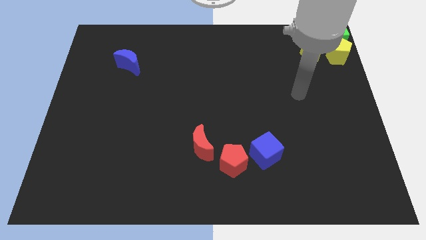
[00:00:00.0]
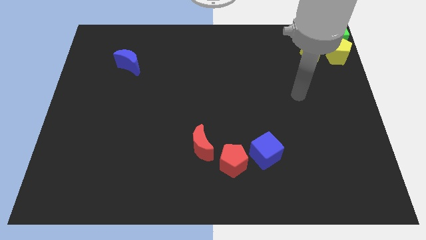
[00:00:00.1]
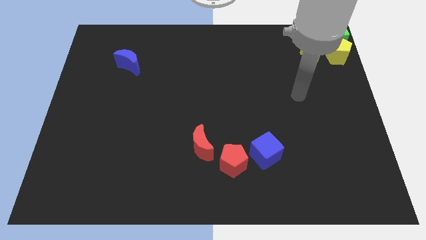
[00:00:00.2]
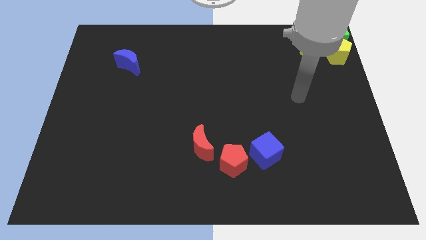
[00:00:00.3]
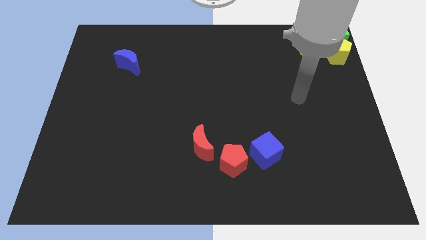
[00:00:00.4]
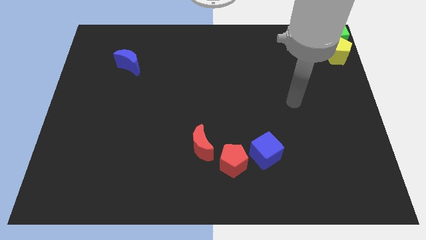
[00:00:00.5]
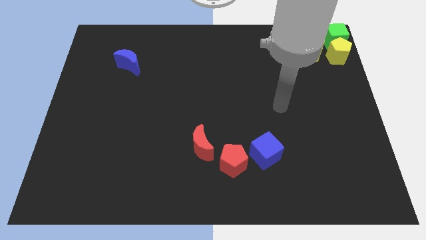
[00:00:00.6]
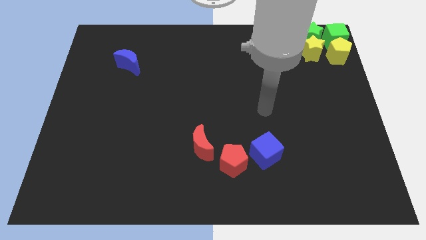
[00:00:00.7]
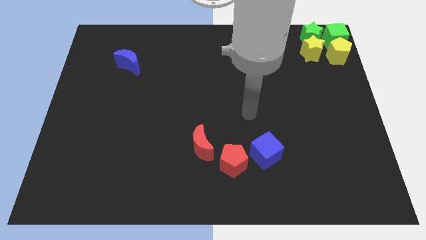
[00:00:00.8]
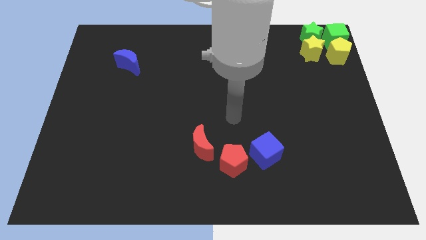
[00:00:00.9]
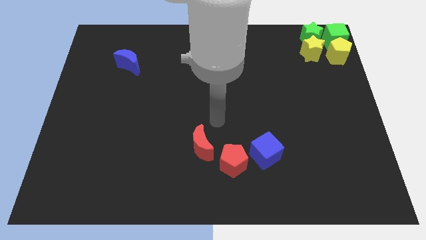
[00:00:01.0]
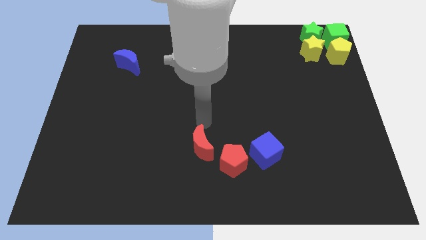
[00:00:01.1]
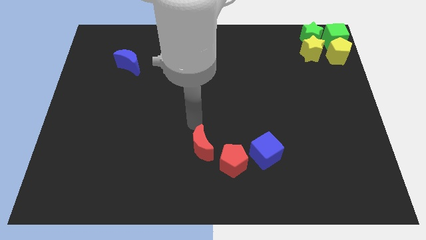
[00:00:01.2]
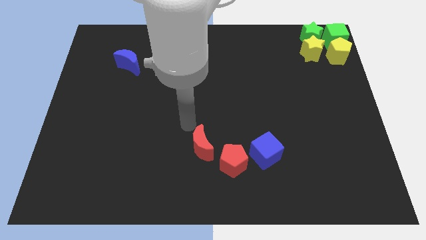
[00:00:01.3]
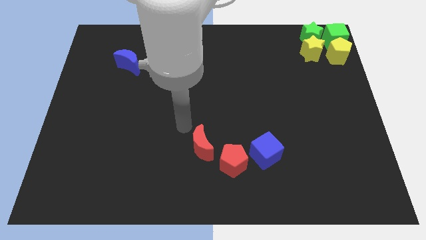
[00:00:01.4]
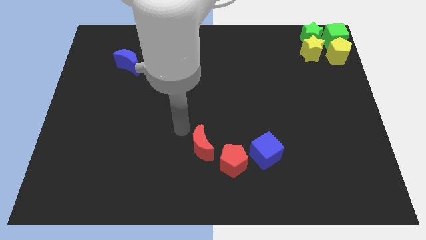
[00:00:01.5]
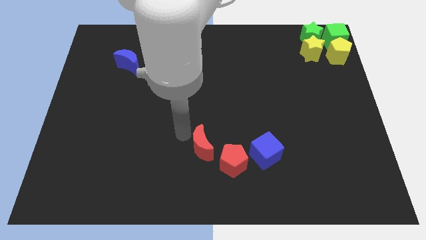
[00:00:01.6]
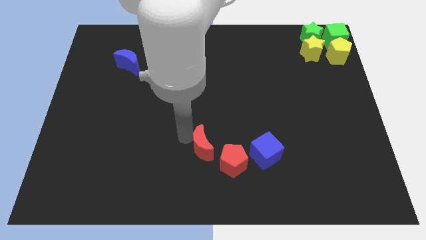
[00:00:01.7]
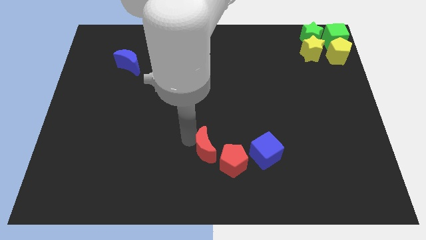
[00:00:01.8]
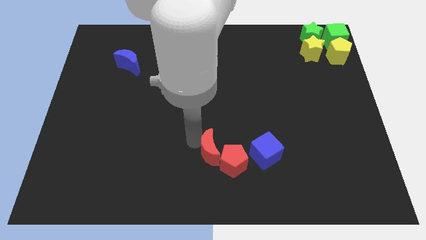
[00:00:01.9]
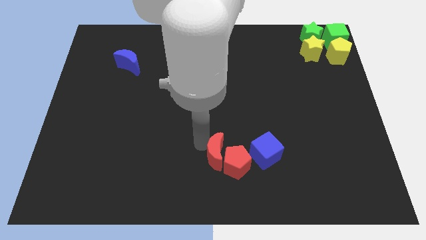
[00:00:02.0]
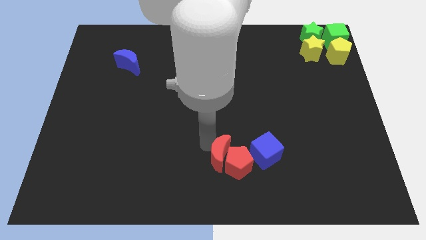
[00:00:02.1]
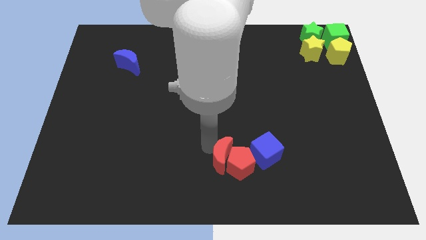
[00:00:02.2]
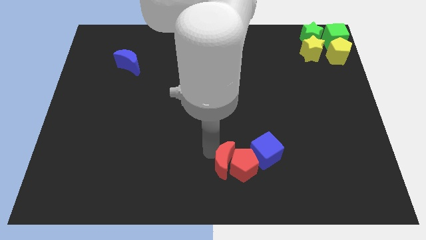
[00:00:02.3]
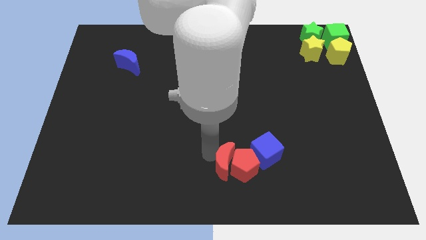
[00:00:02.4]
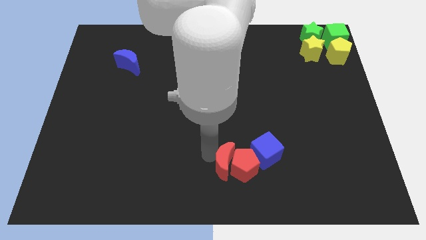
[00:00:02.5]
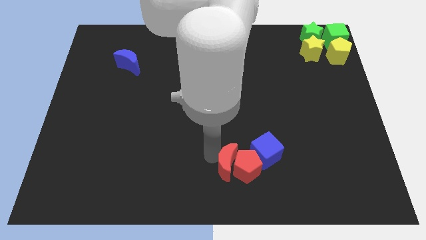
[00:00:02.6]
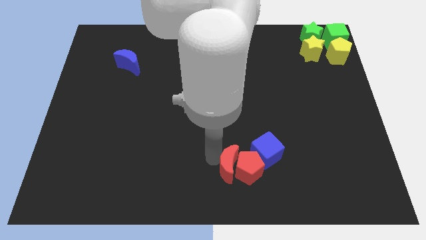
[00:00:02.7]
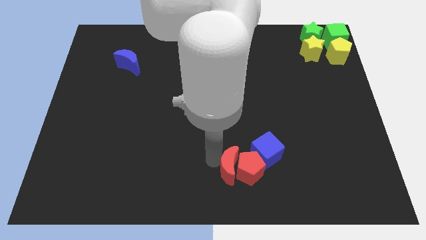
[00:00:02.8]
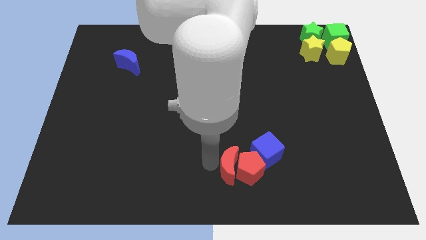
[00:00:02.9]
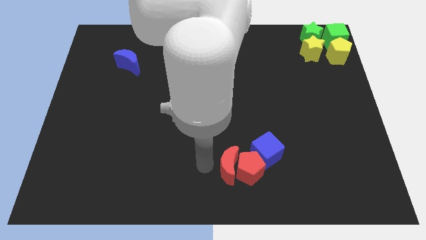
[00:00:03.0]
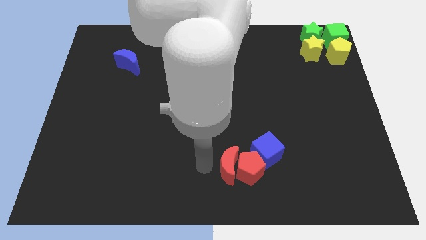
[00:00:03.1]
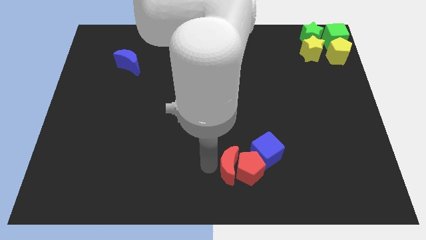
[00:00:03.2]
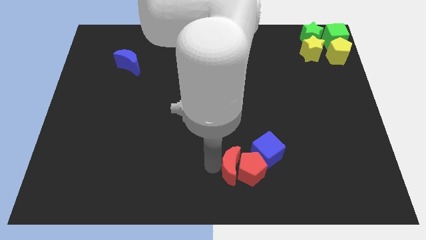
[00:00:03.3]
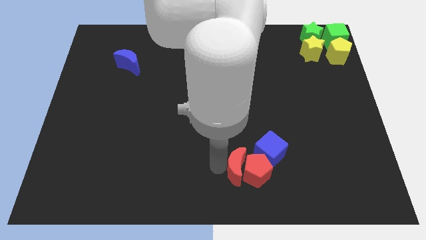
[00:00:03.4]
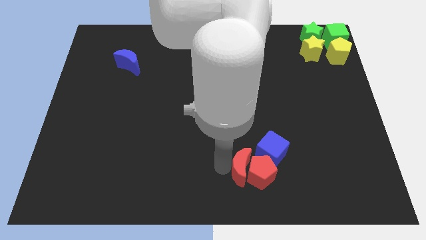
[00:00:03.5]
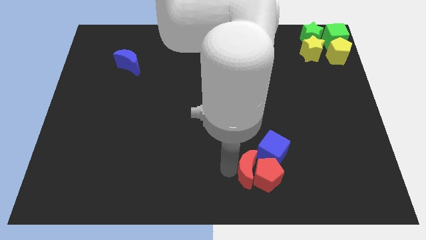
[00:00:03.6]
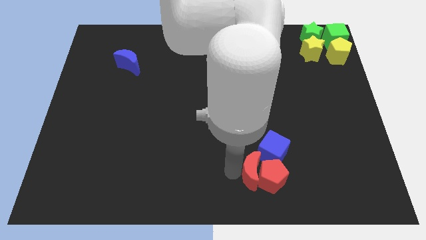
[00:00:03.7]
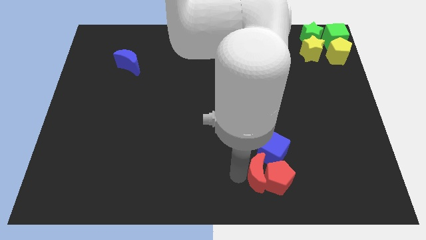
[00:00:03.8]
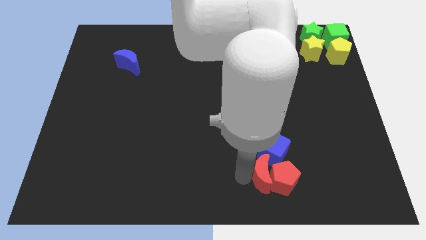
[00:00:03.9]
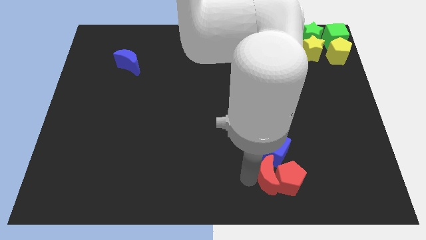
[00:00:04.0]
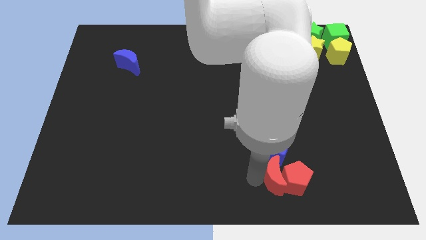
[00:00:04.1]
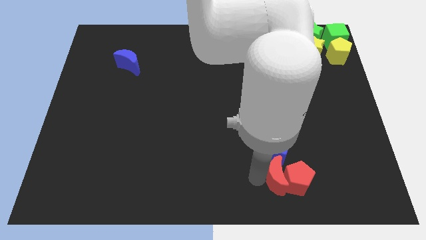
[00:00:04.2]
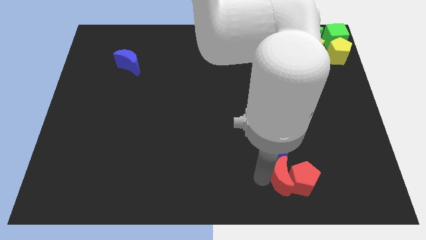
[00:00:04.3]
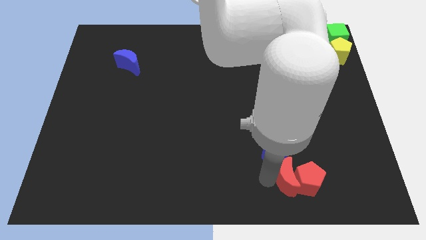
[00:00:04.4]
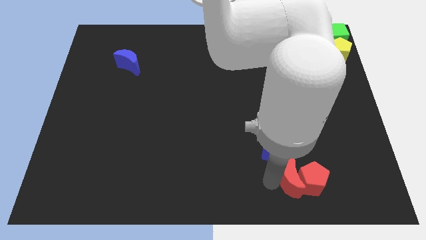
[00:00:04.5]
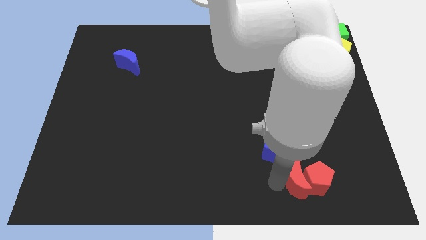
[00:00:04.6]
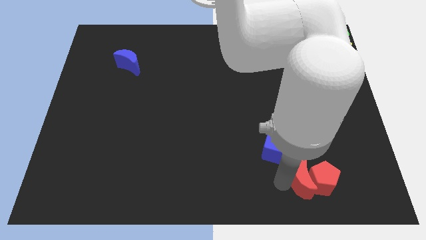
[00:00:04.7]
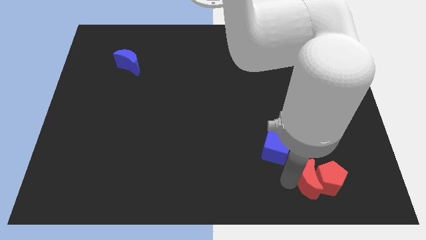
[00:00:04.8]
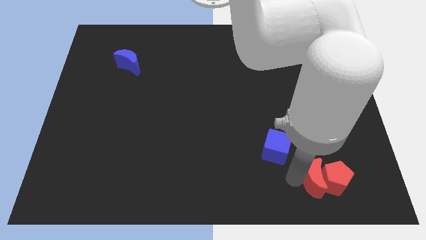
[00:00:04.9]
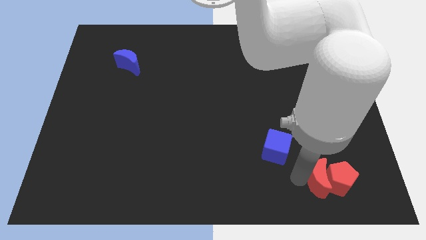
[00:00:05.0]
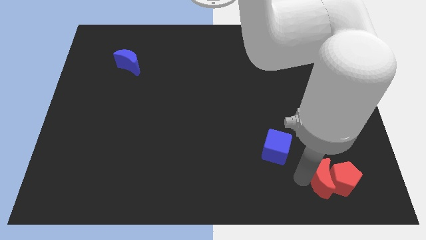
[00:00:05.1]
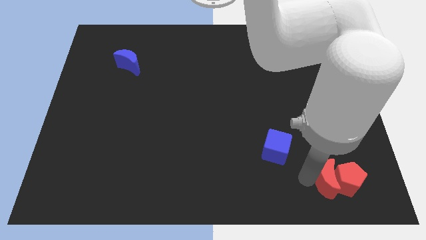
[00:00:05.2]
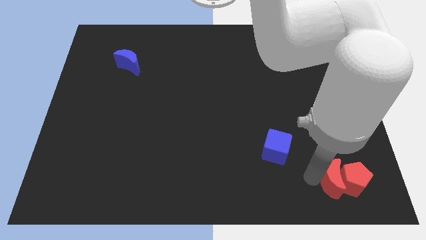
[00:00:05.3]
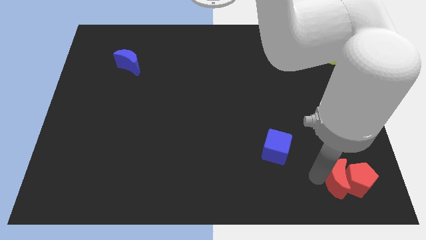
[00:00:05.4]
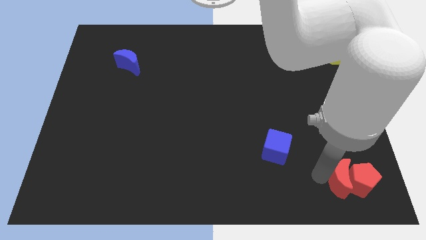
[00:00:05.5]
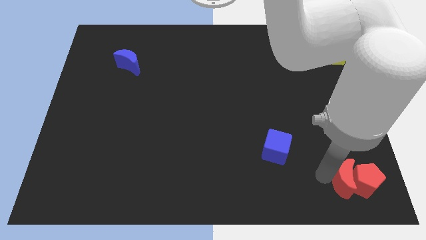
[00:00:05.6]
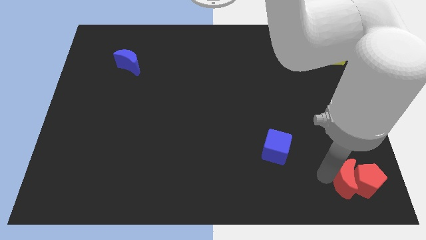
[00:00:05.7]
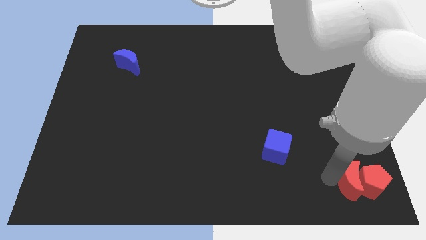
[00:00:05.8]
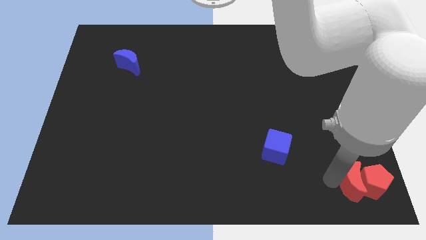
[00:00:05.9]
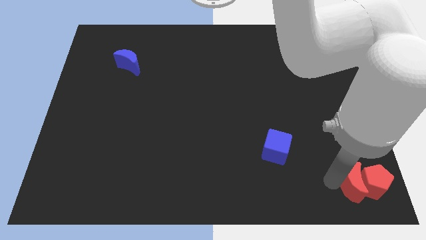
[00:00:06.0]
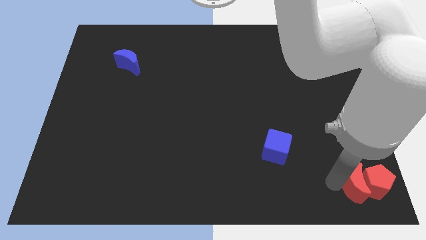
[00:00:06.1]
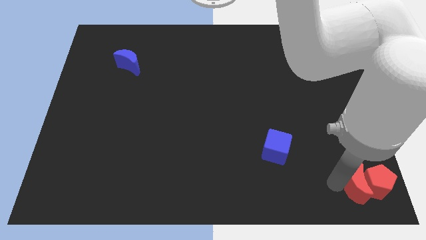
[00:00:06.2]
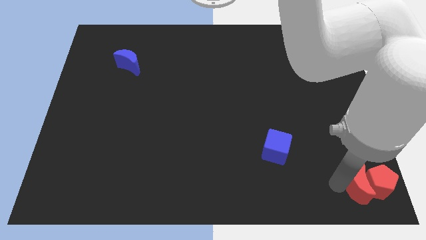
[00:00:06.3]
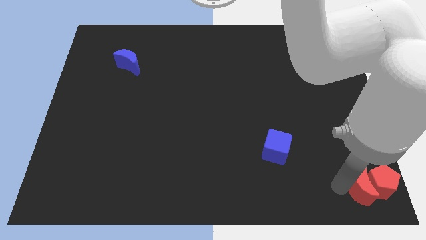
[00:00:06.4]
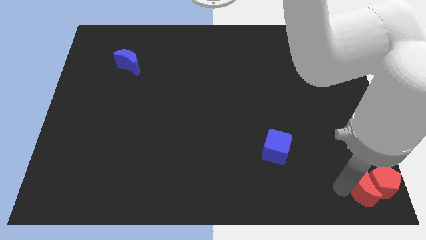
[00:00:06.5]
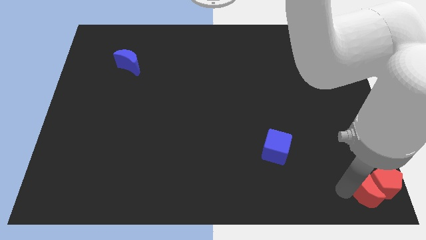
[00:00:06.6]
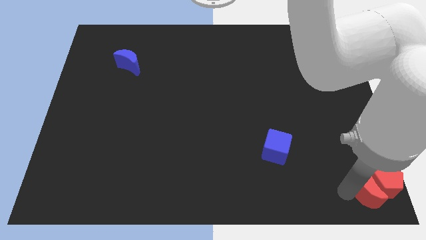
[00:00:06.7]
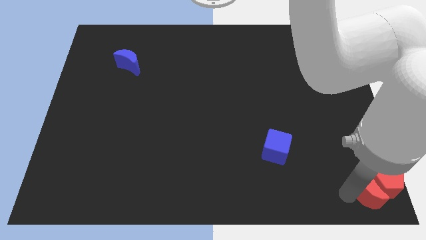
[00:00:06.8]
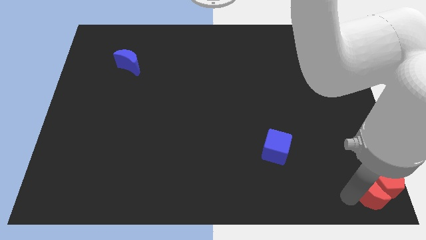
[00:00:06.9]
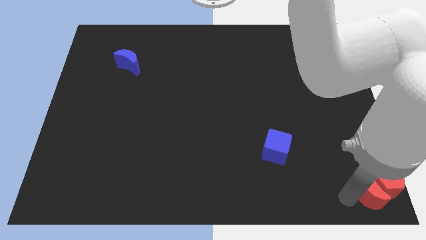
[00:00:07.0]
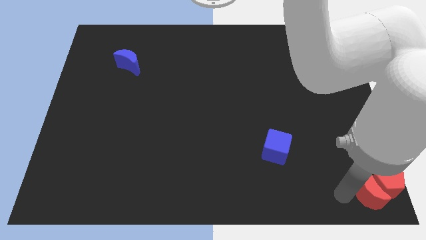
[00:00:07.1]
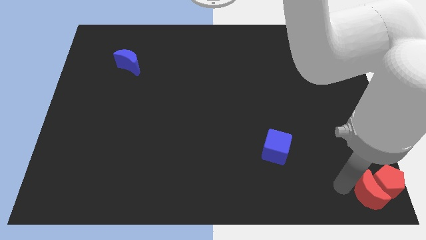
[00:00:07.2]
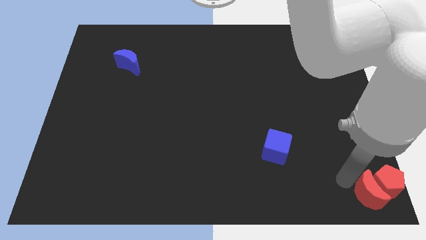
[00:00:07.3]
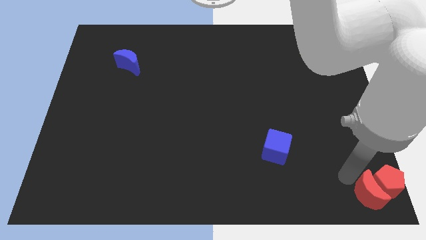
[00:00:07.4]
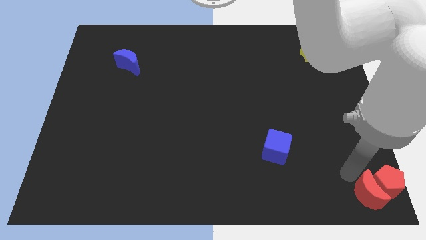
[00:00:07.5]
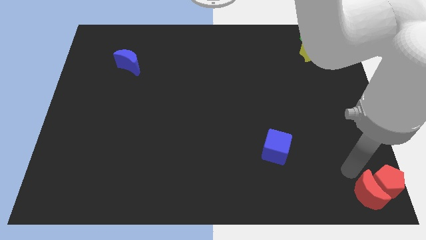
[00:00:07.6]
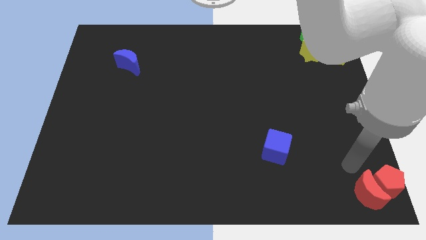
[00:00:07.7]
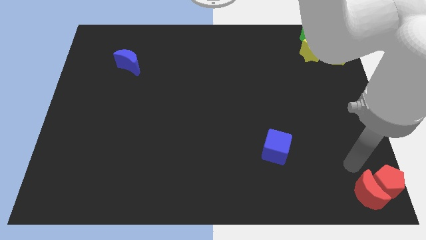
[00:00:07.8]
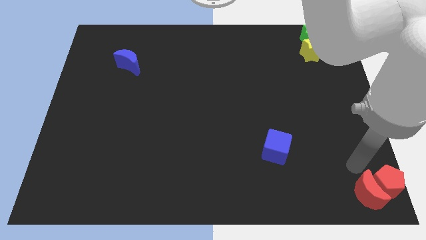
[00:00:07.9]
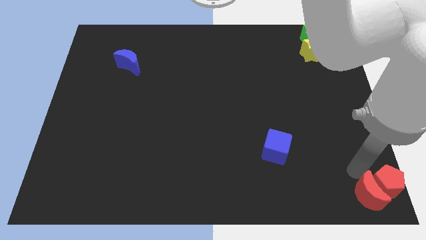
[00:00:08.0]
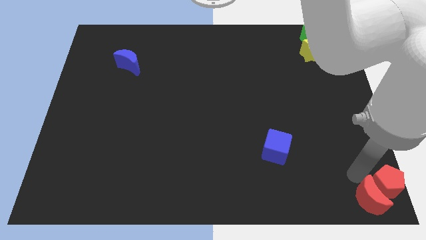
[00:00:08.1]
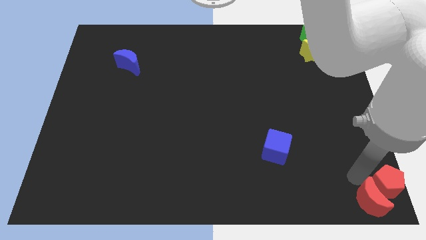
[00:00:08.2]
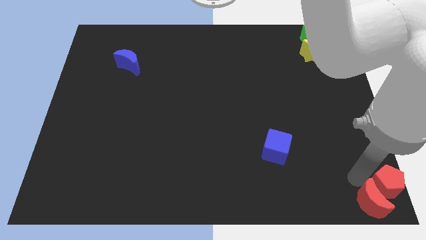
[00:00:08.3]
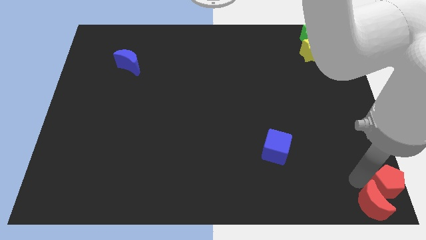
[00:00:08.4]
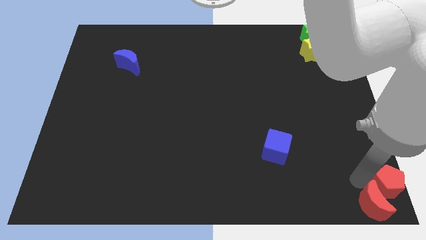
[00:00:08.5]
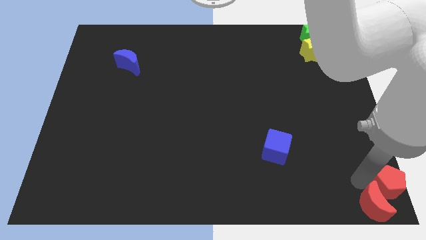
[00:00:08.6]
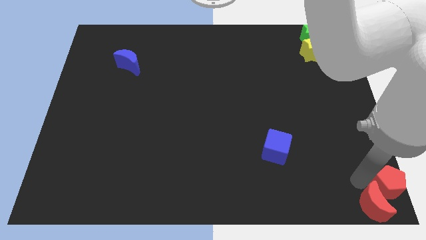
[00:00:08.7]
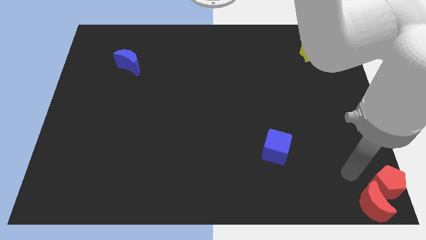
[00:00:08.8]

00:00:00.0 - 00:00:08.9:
push the red crescent and red pentagon to the bottom right corner of the board
